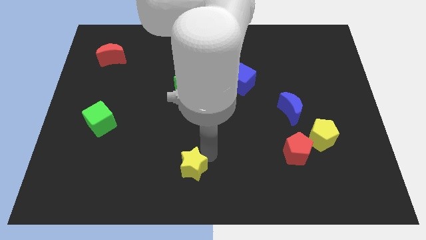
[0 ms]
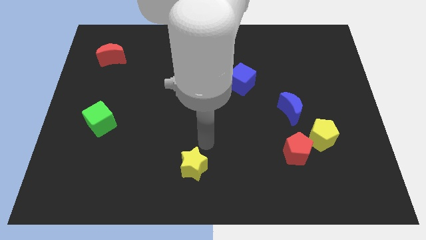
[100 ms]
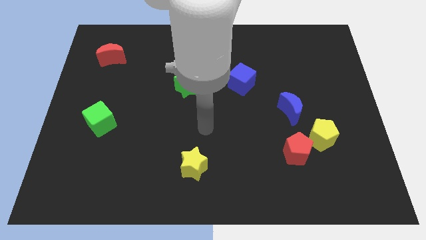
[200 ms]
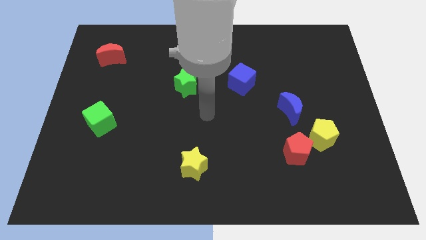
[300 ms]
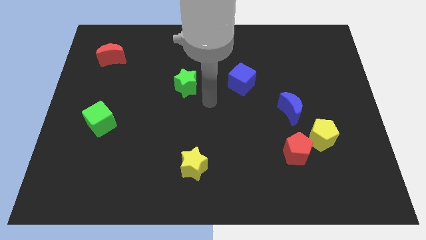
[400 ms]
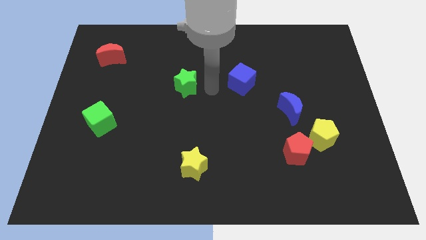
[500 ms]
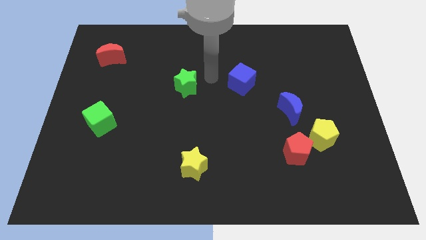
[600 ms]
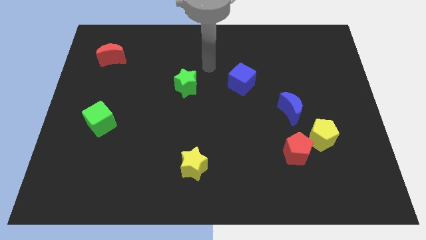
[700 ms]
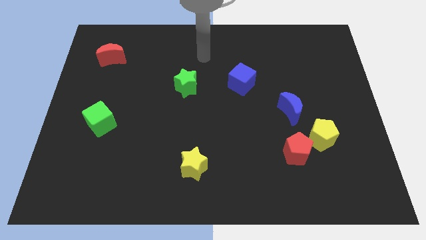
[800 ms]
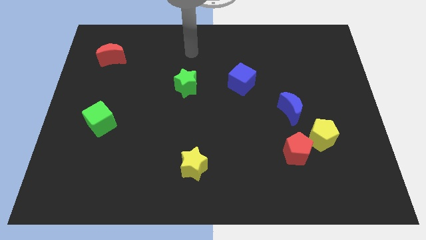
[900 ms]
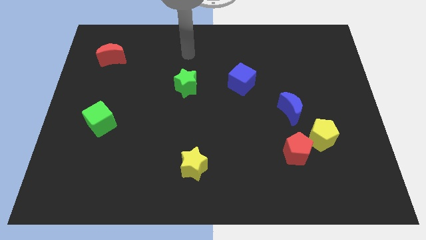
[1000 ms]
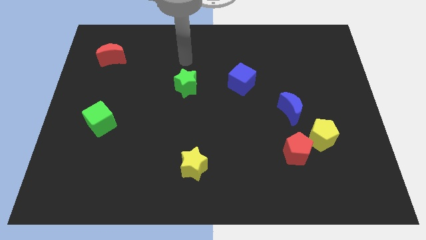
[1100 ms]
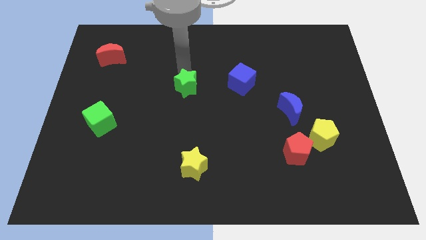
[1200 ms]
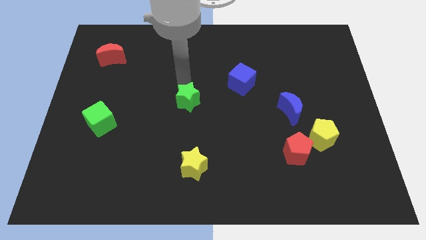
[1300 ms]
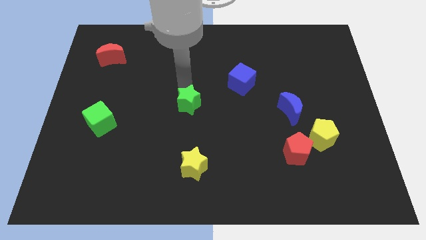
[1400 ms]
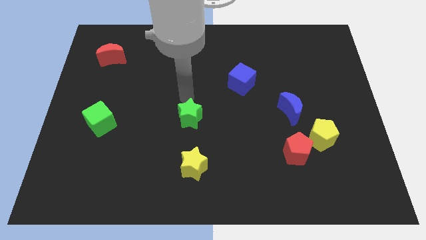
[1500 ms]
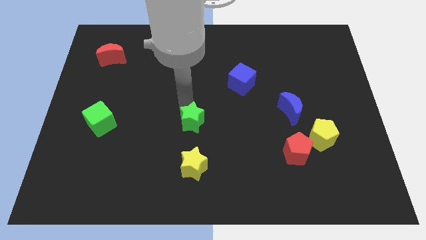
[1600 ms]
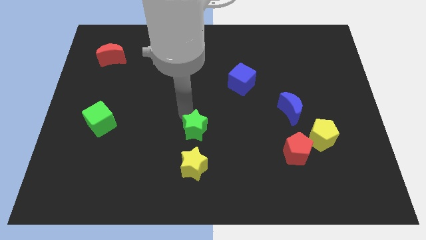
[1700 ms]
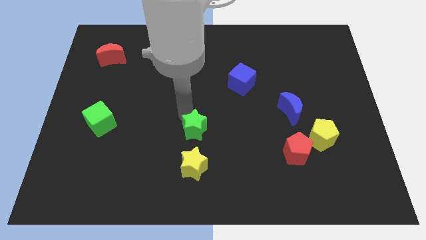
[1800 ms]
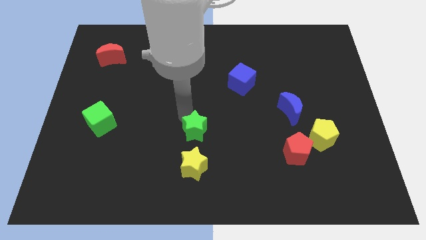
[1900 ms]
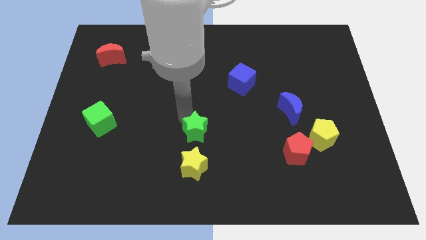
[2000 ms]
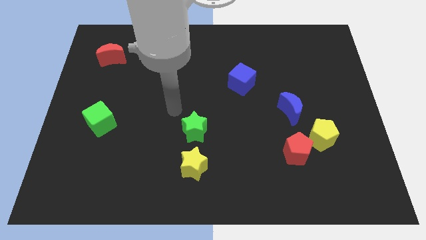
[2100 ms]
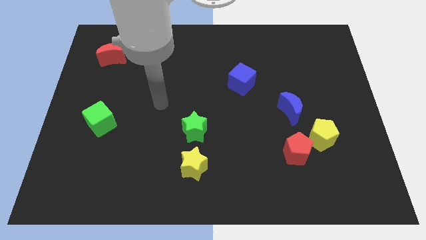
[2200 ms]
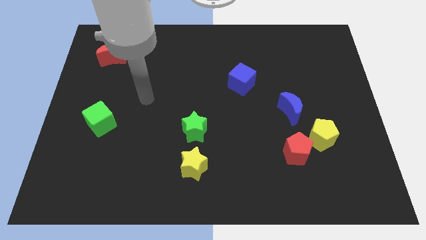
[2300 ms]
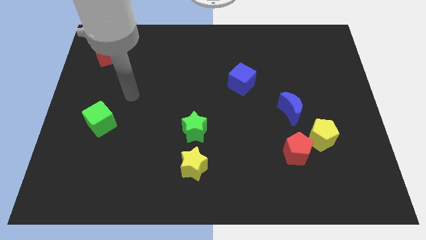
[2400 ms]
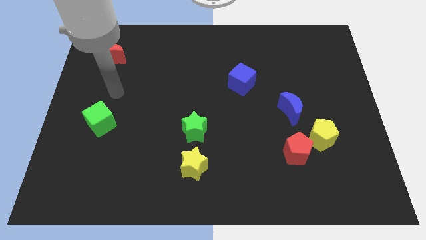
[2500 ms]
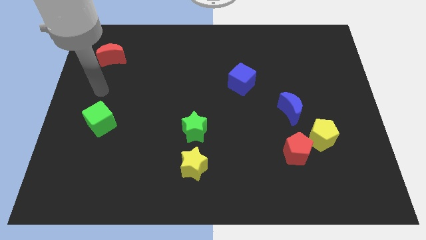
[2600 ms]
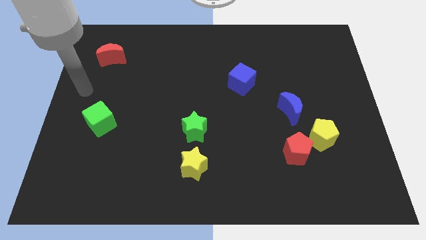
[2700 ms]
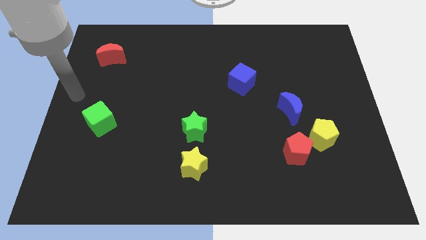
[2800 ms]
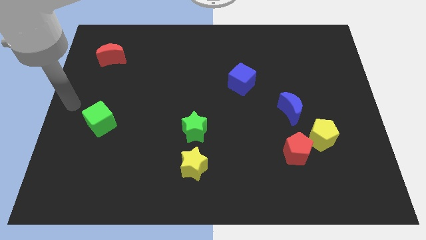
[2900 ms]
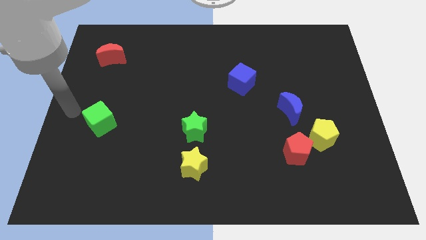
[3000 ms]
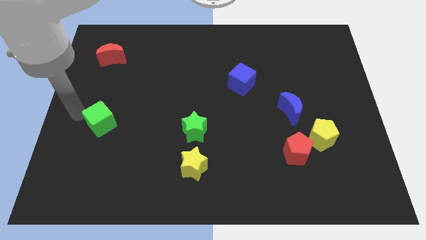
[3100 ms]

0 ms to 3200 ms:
put the green star parallel right to the green cube

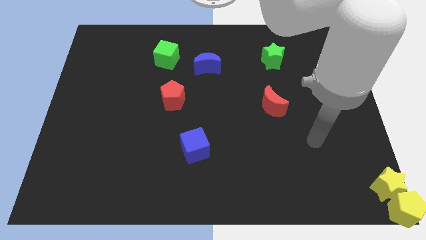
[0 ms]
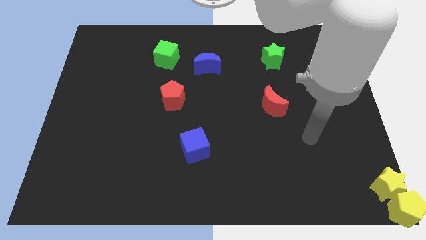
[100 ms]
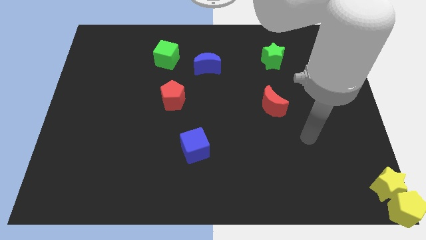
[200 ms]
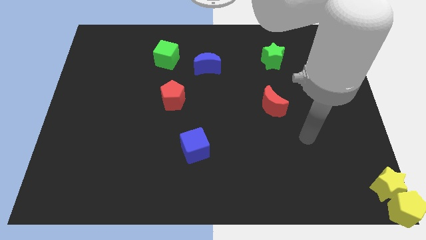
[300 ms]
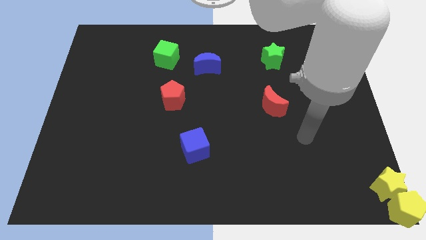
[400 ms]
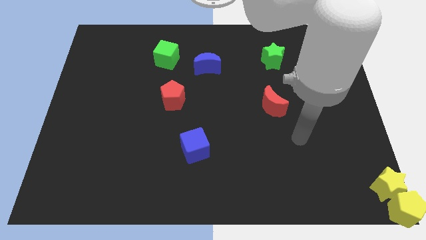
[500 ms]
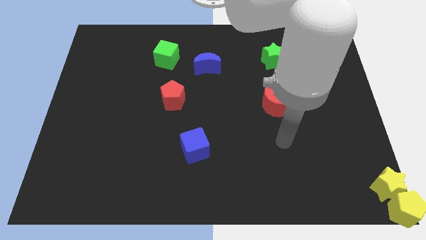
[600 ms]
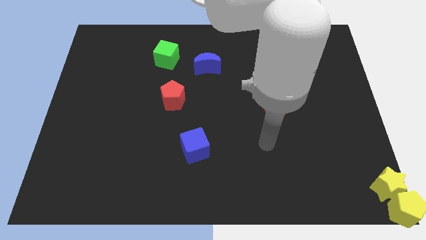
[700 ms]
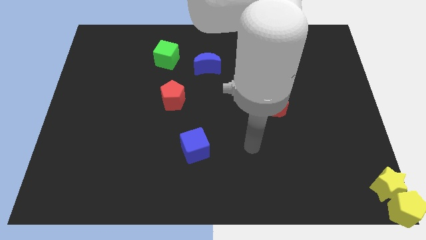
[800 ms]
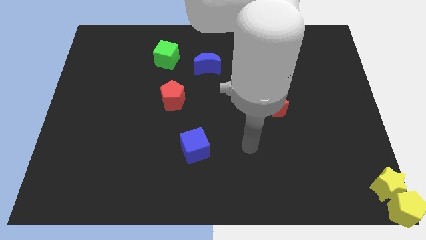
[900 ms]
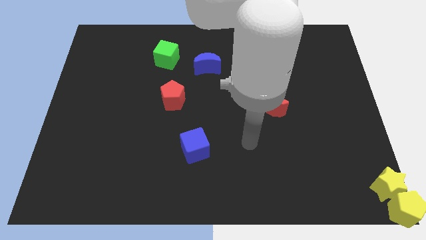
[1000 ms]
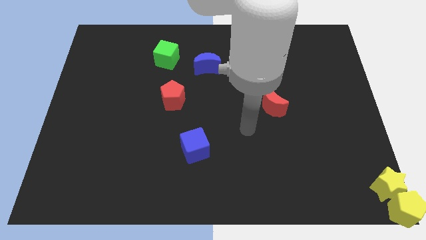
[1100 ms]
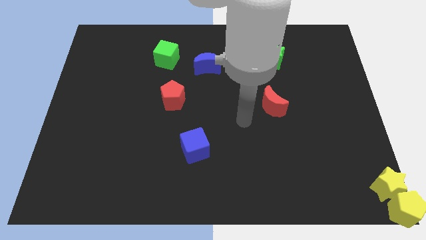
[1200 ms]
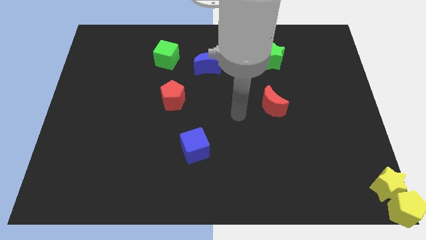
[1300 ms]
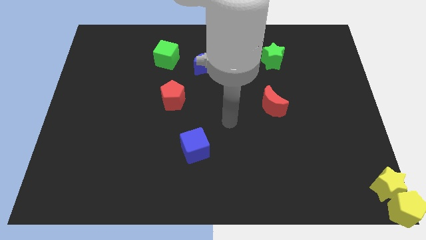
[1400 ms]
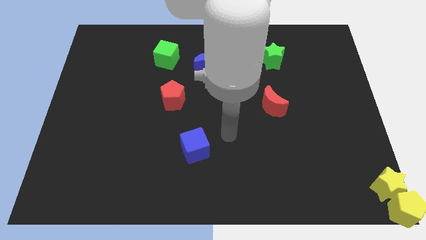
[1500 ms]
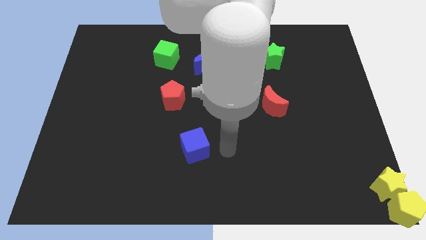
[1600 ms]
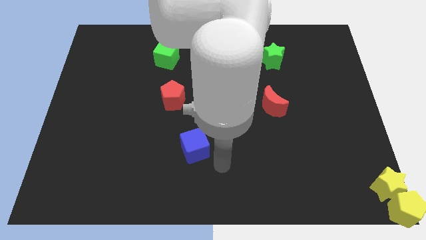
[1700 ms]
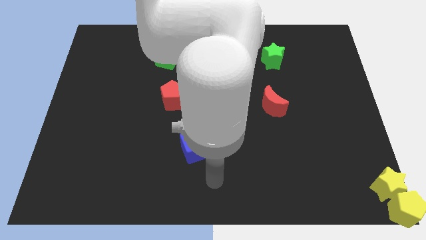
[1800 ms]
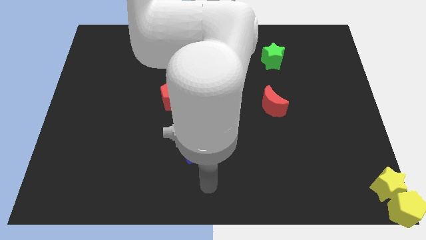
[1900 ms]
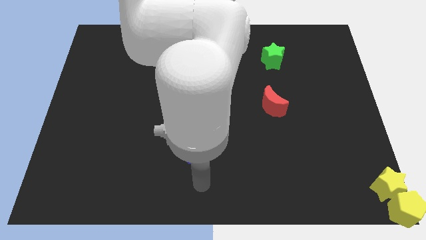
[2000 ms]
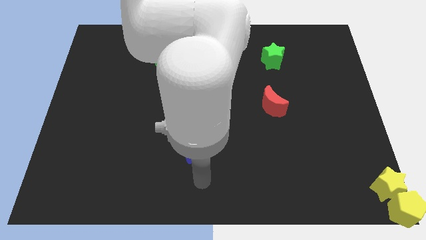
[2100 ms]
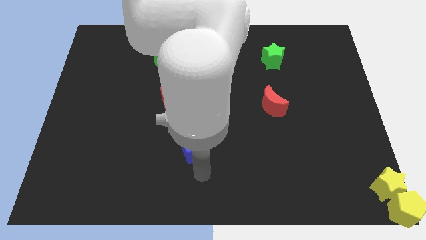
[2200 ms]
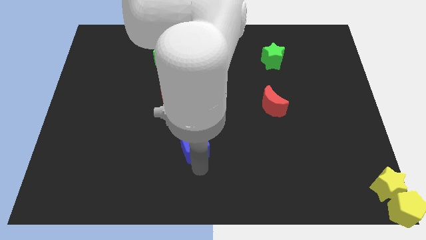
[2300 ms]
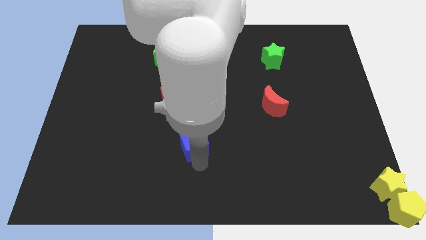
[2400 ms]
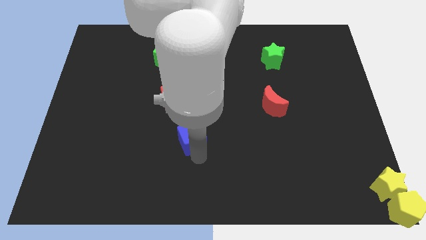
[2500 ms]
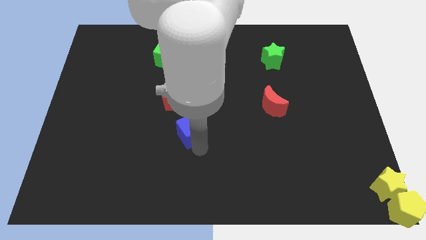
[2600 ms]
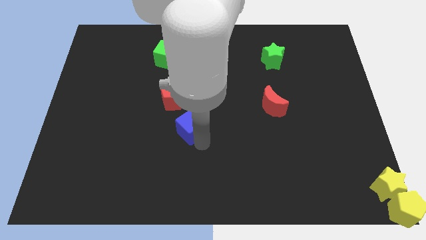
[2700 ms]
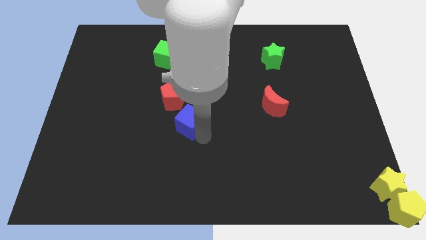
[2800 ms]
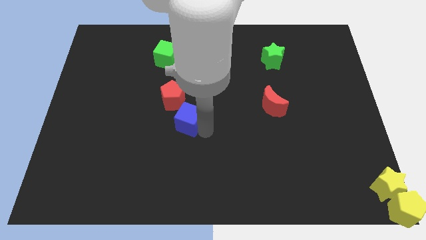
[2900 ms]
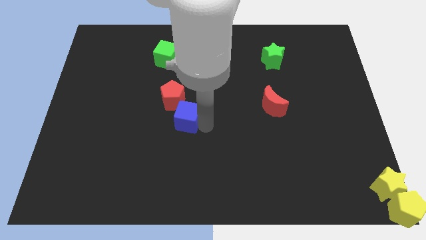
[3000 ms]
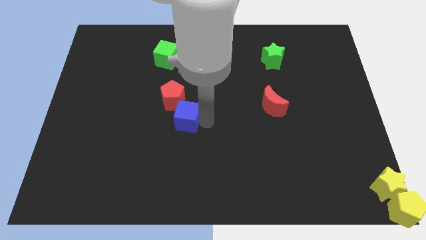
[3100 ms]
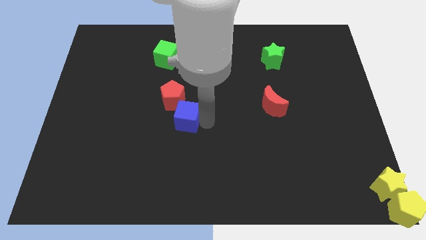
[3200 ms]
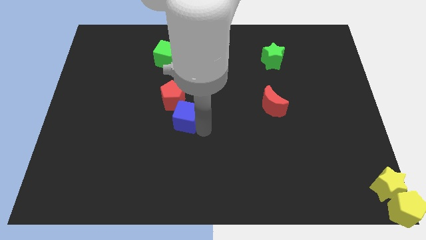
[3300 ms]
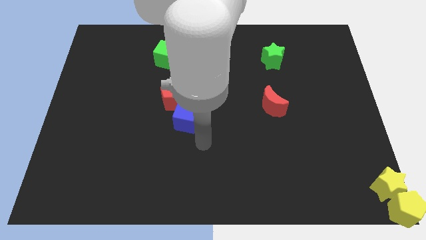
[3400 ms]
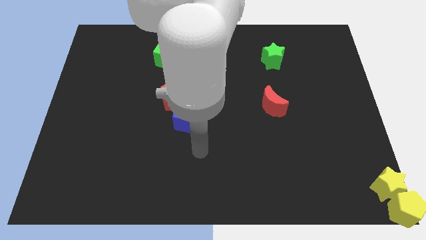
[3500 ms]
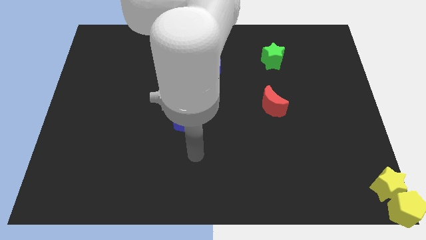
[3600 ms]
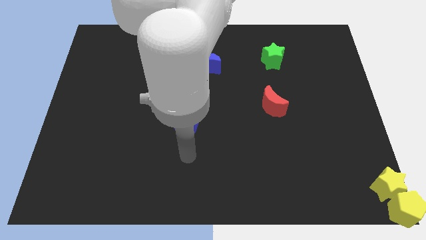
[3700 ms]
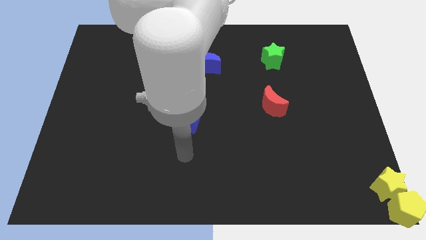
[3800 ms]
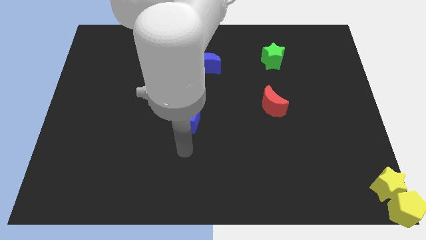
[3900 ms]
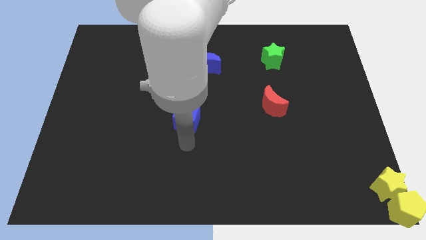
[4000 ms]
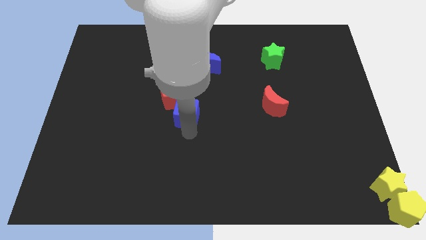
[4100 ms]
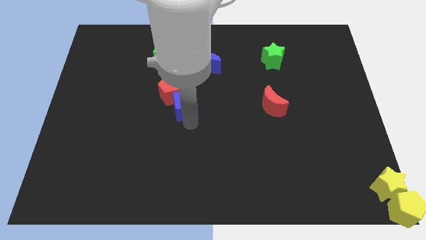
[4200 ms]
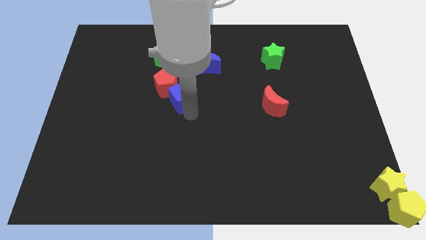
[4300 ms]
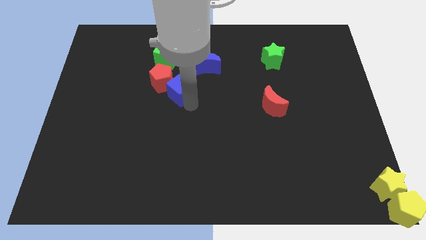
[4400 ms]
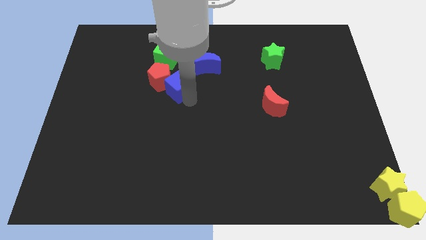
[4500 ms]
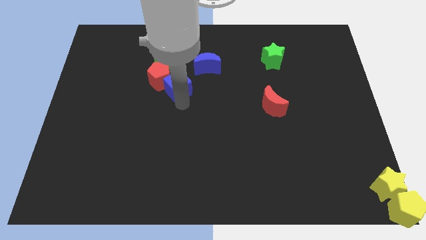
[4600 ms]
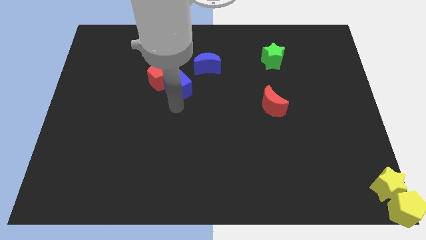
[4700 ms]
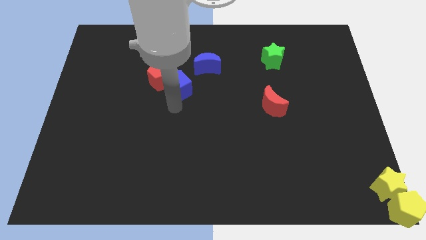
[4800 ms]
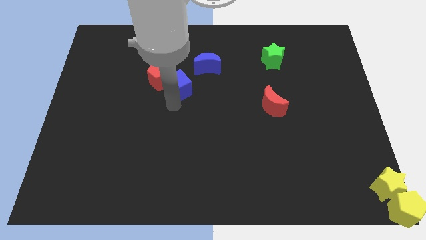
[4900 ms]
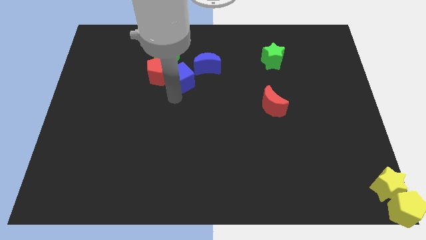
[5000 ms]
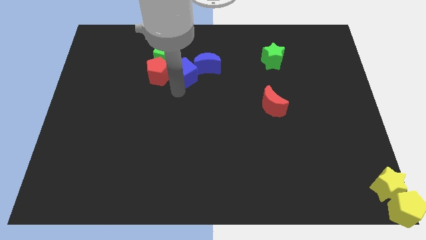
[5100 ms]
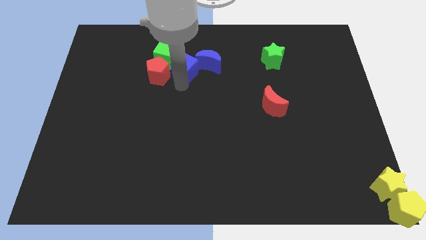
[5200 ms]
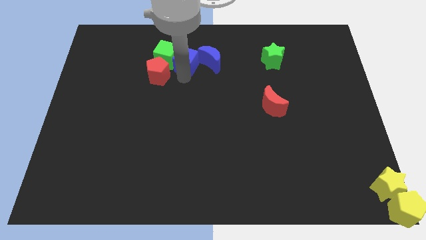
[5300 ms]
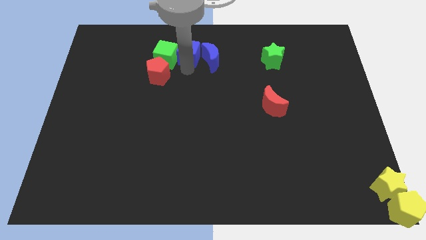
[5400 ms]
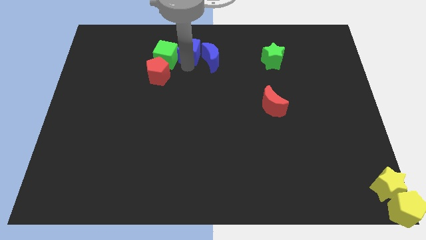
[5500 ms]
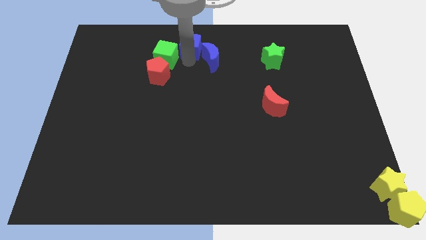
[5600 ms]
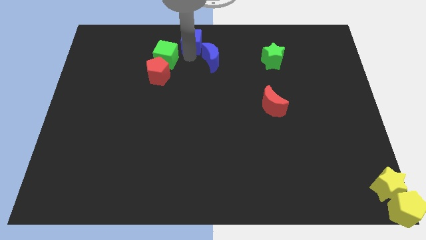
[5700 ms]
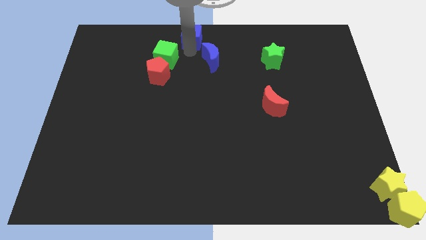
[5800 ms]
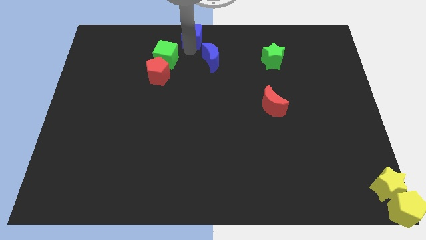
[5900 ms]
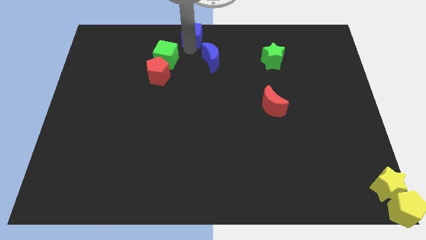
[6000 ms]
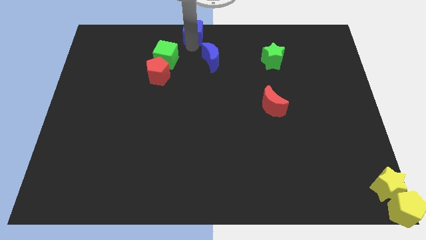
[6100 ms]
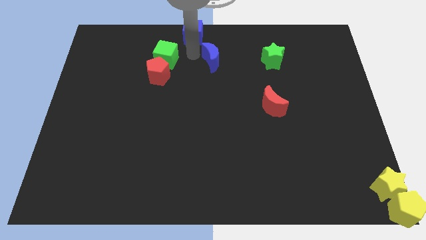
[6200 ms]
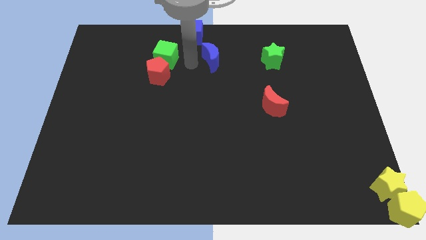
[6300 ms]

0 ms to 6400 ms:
place blue cube to the top left
